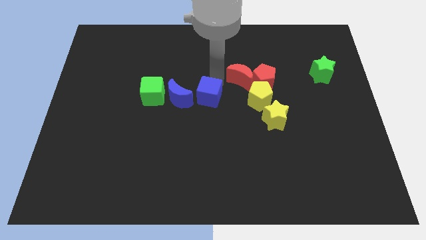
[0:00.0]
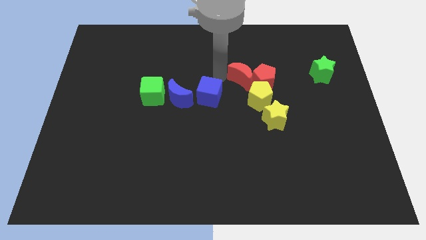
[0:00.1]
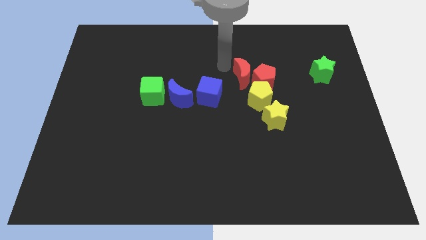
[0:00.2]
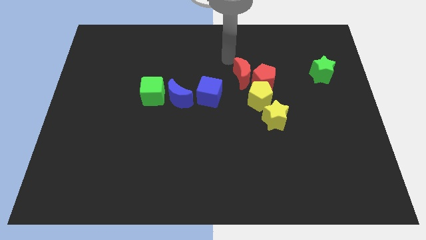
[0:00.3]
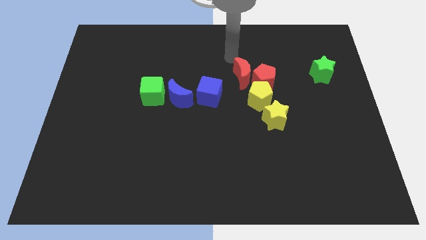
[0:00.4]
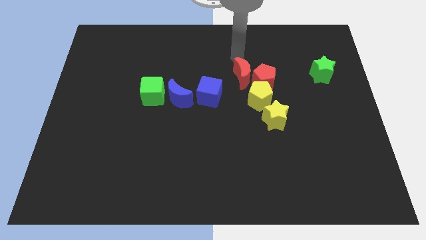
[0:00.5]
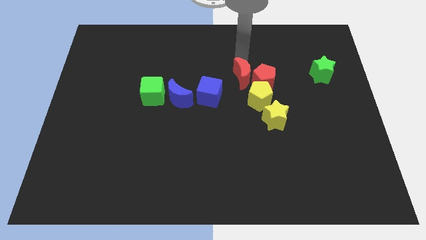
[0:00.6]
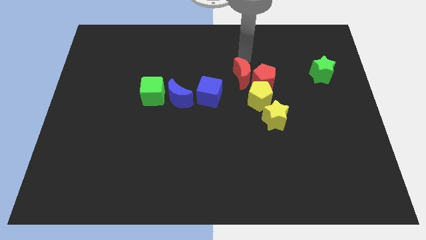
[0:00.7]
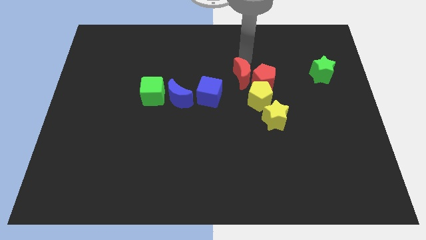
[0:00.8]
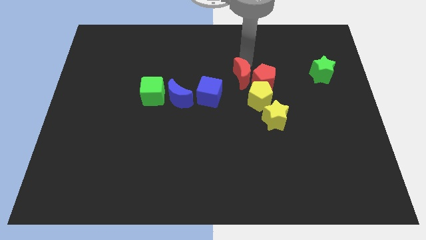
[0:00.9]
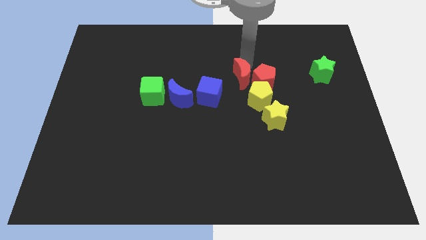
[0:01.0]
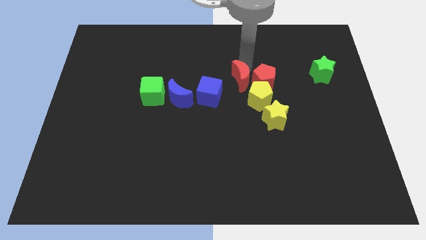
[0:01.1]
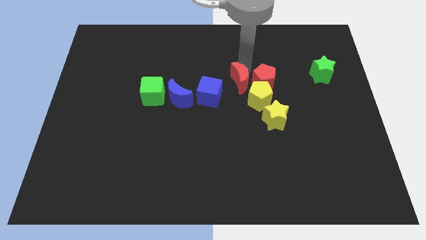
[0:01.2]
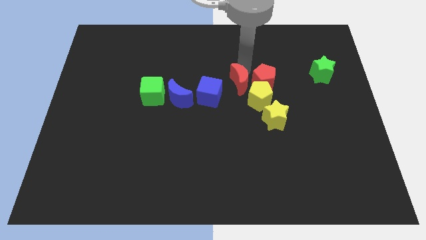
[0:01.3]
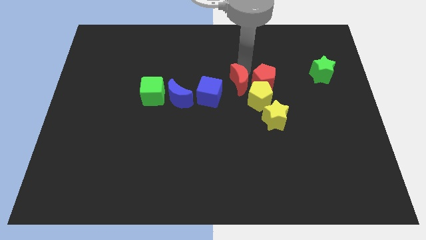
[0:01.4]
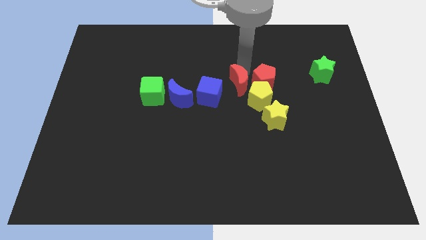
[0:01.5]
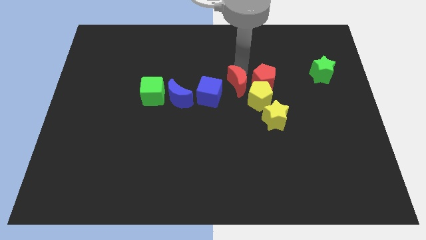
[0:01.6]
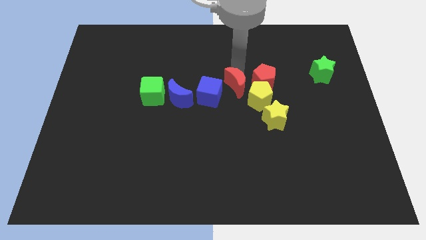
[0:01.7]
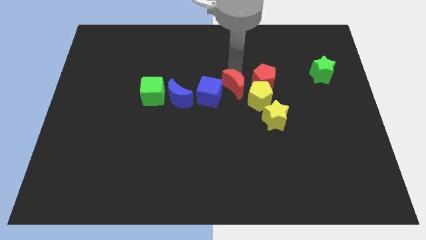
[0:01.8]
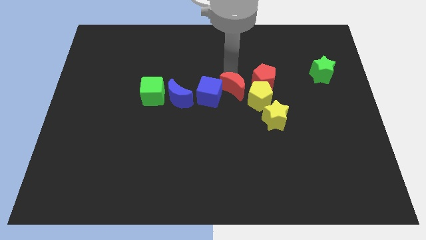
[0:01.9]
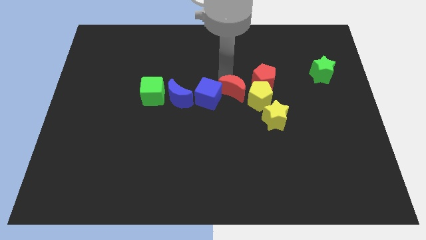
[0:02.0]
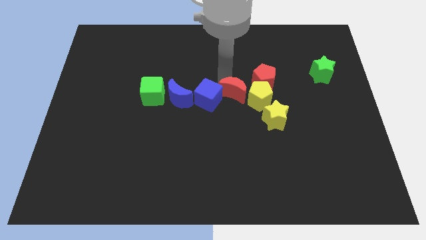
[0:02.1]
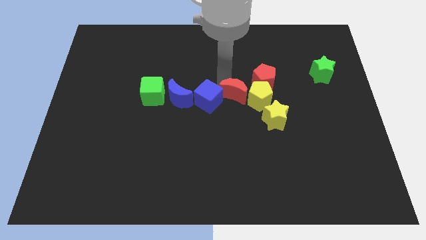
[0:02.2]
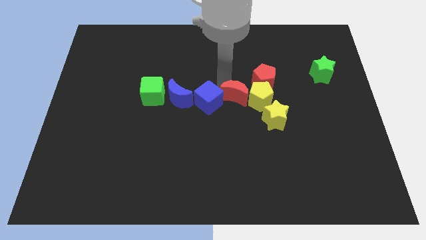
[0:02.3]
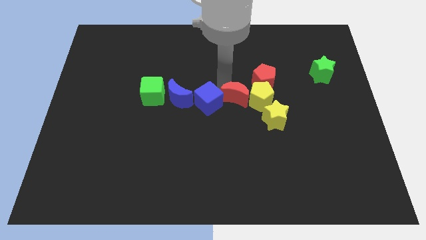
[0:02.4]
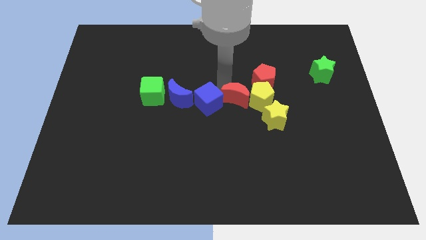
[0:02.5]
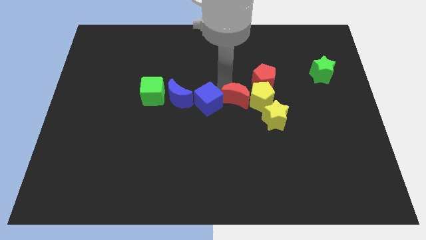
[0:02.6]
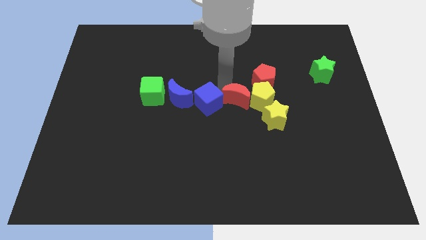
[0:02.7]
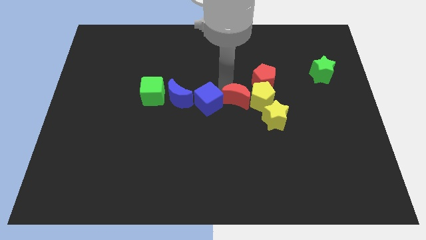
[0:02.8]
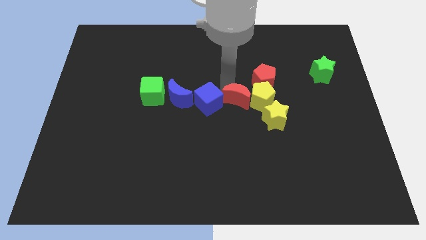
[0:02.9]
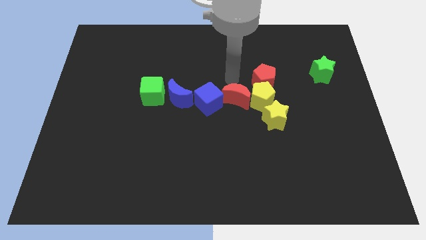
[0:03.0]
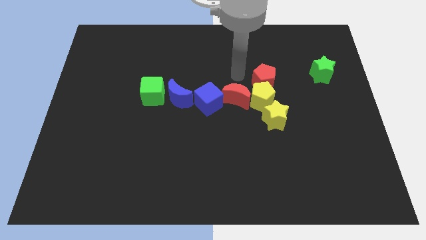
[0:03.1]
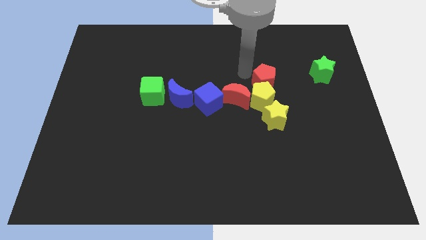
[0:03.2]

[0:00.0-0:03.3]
move the red moon in between blue cube and yellow pentagon

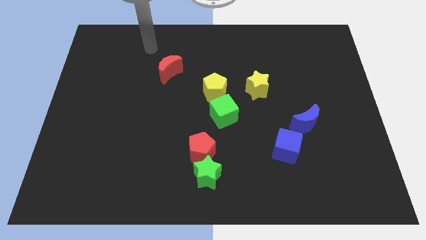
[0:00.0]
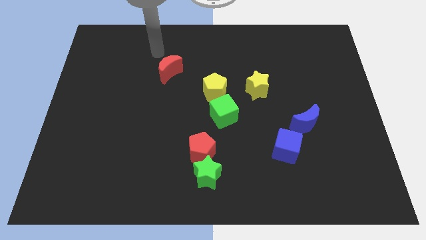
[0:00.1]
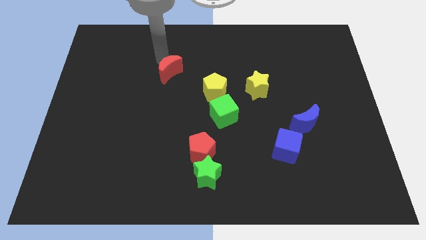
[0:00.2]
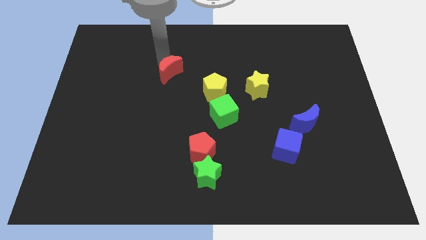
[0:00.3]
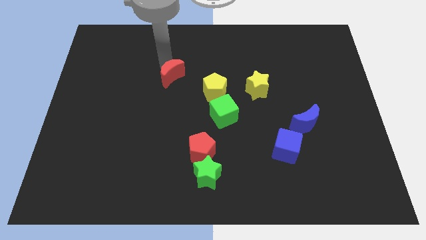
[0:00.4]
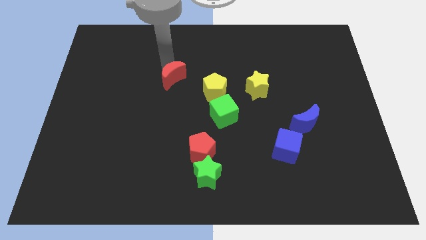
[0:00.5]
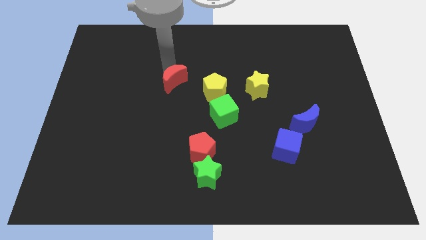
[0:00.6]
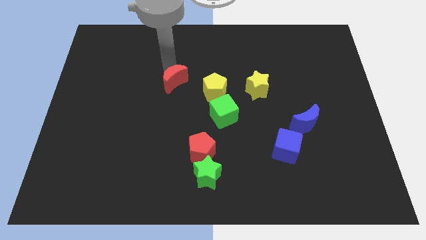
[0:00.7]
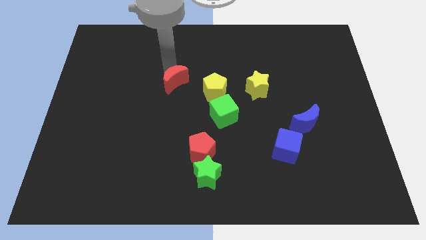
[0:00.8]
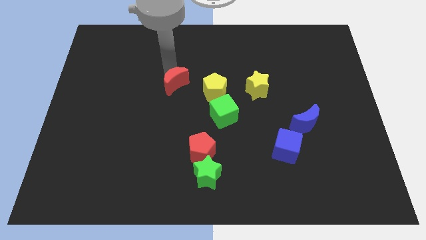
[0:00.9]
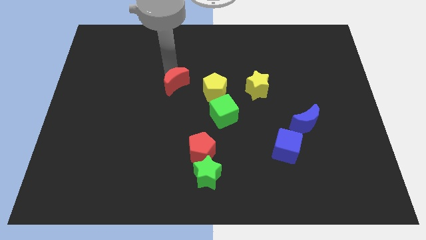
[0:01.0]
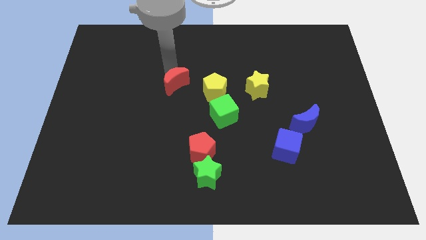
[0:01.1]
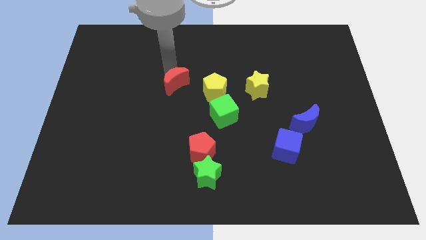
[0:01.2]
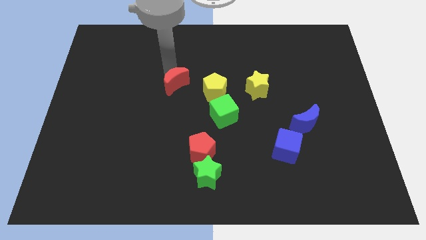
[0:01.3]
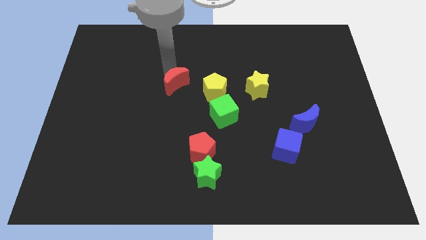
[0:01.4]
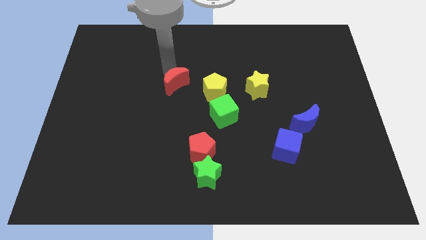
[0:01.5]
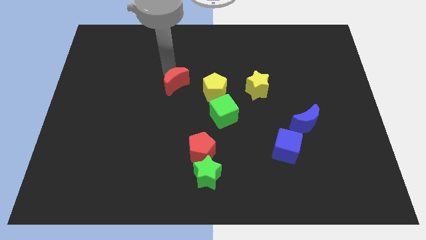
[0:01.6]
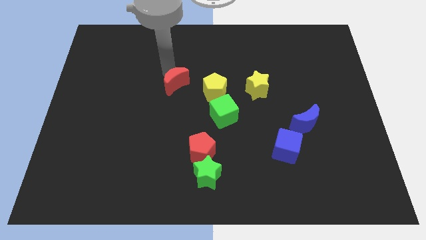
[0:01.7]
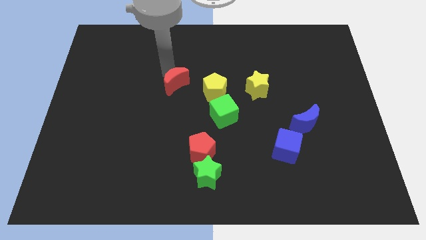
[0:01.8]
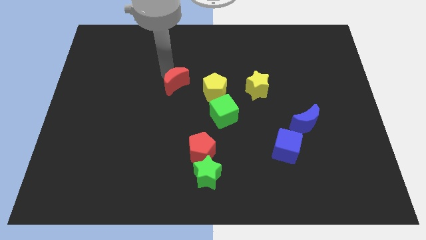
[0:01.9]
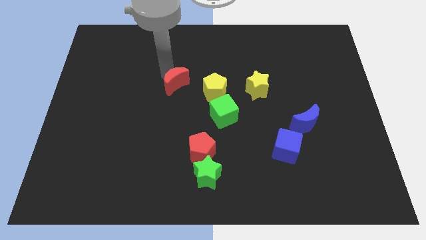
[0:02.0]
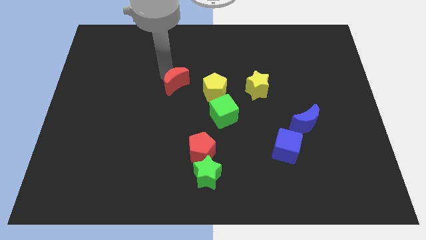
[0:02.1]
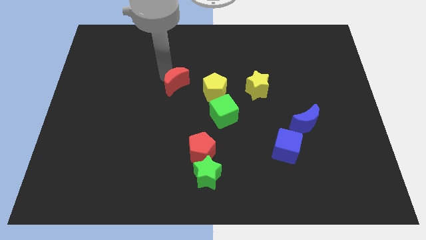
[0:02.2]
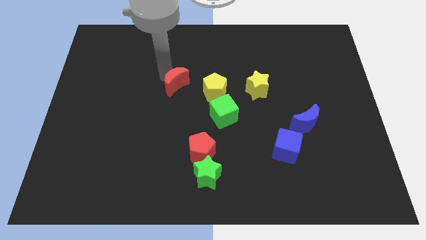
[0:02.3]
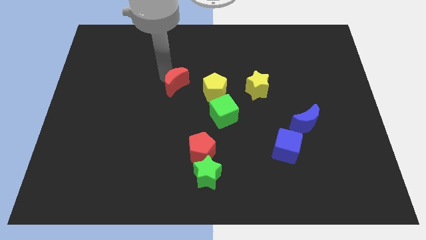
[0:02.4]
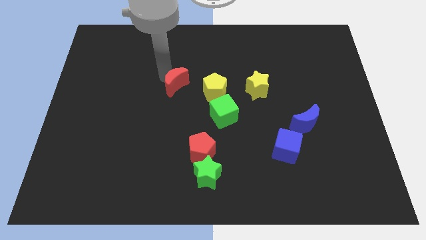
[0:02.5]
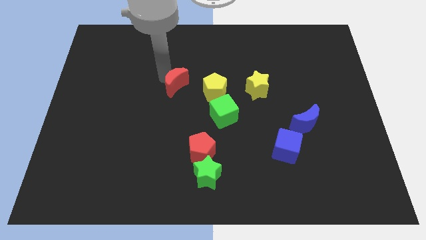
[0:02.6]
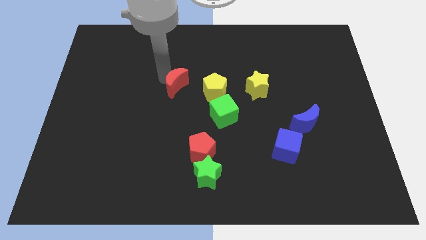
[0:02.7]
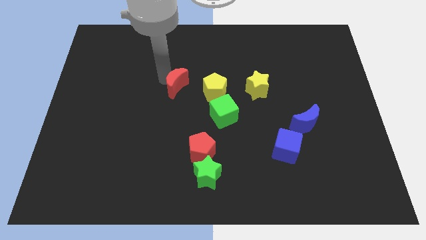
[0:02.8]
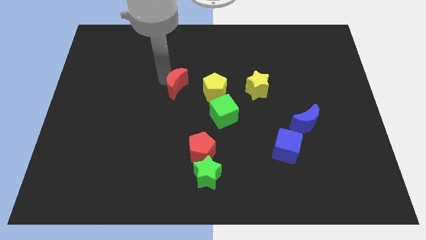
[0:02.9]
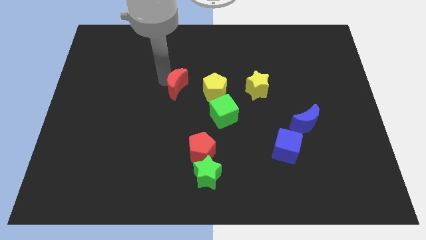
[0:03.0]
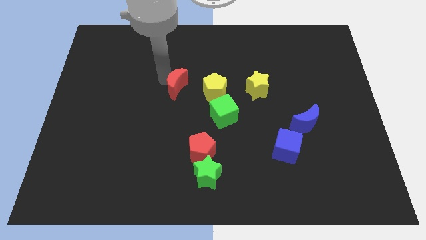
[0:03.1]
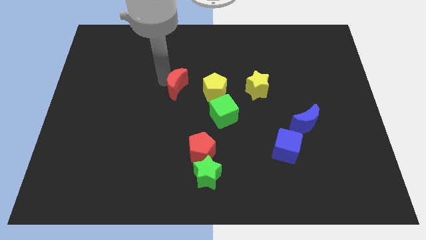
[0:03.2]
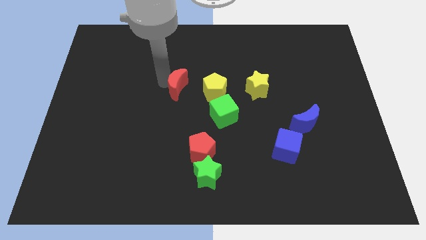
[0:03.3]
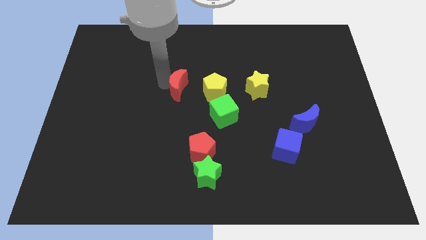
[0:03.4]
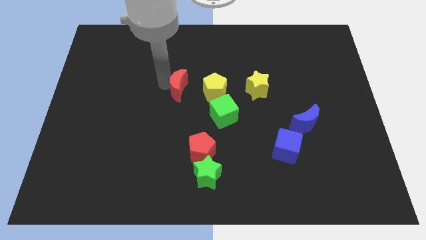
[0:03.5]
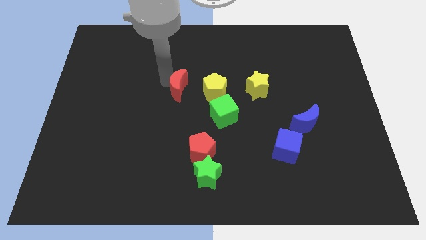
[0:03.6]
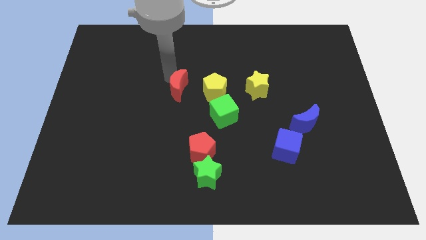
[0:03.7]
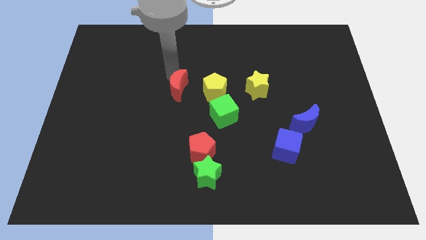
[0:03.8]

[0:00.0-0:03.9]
place the red crescent to the left of the yellow pentagon

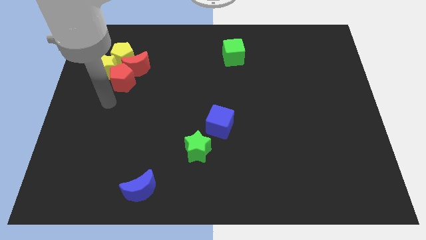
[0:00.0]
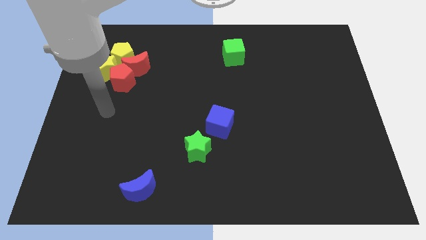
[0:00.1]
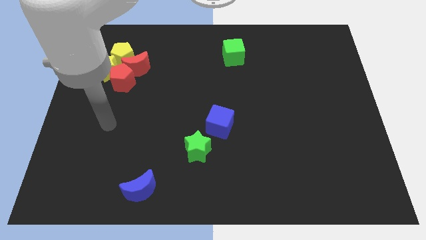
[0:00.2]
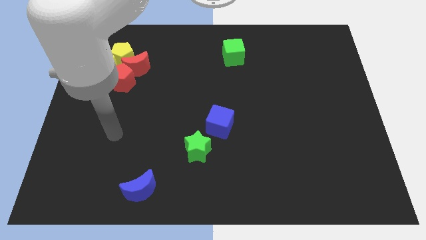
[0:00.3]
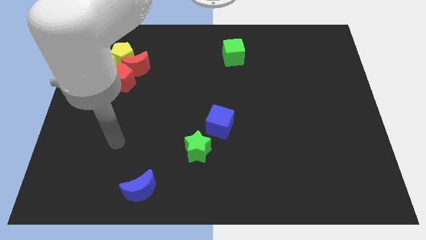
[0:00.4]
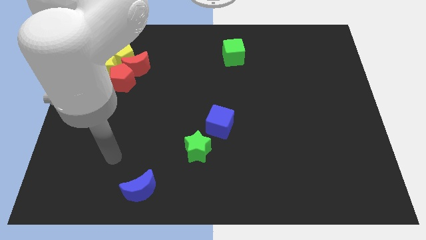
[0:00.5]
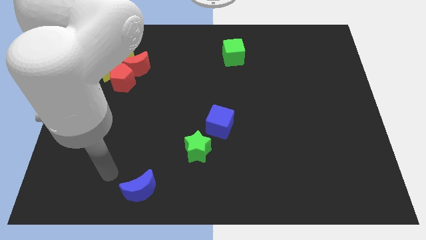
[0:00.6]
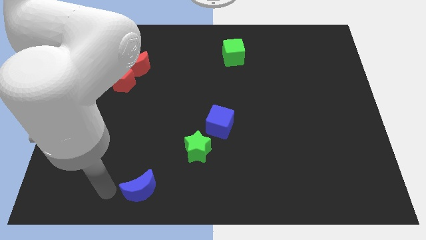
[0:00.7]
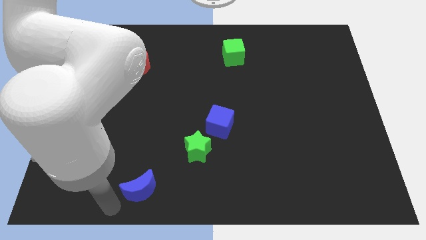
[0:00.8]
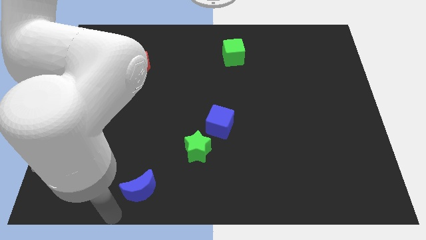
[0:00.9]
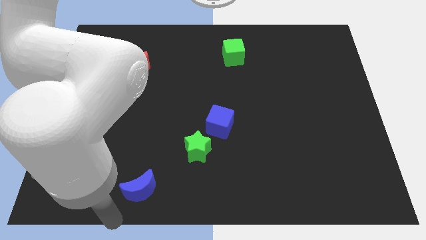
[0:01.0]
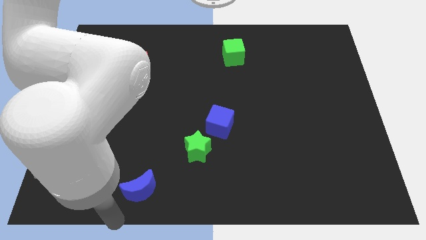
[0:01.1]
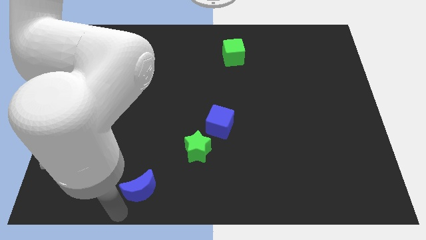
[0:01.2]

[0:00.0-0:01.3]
move your arm towards the blue crescent

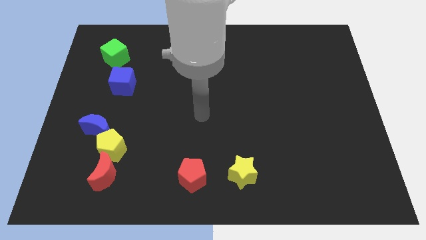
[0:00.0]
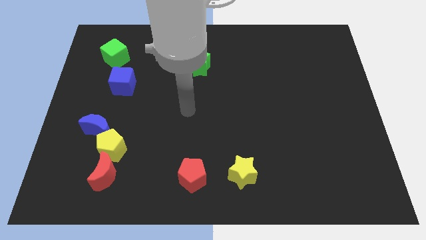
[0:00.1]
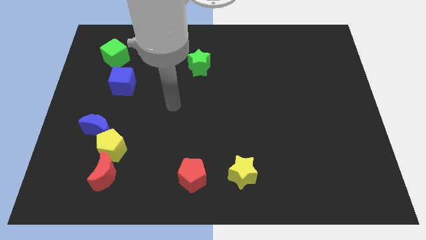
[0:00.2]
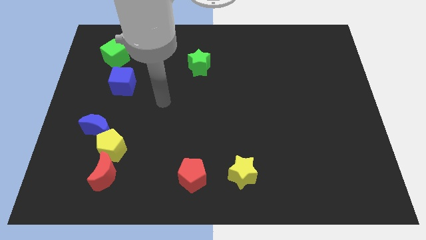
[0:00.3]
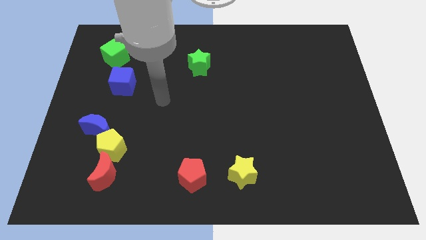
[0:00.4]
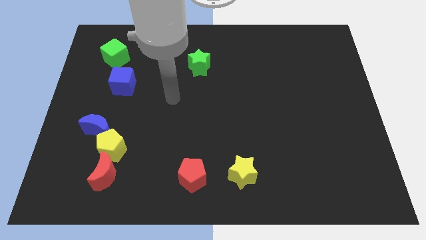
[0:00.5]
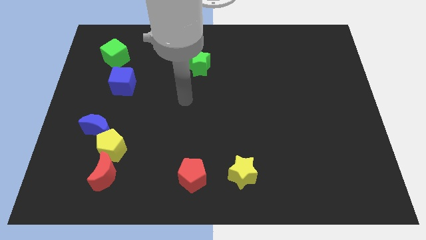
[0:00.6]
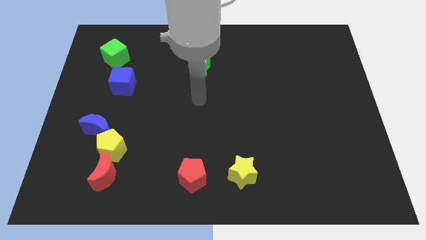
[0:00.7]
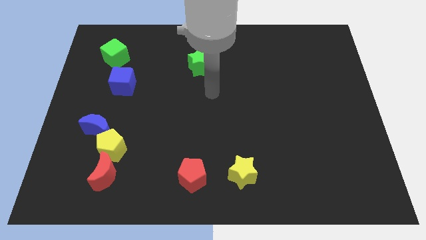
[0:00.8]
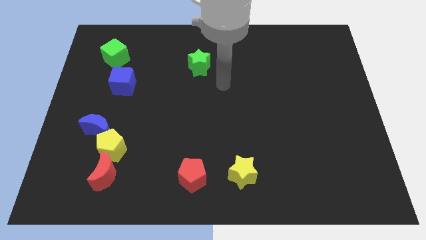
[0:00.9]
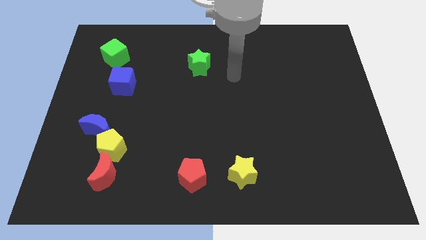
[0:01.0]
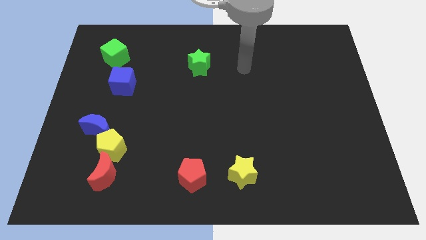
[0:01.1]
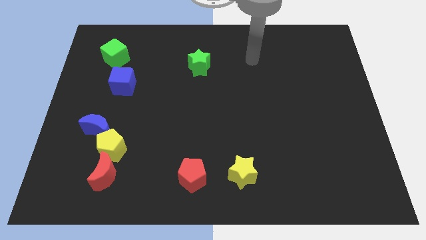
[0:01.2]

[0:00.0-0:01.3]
place your arm to the right of the green star
